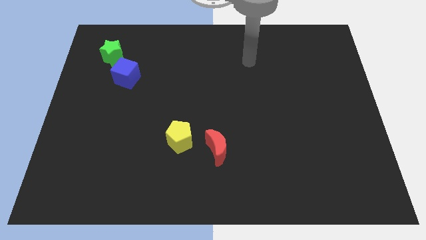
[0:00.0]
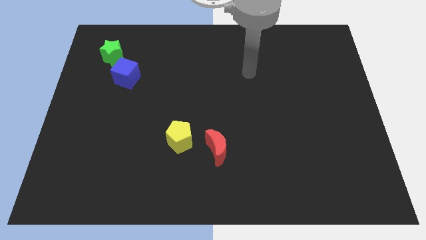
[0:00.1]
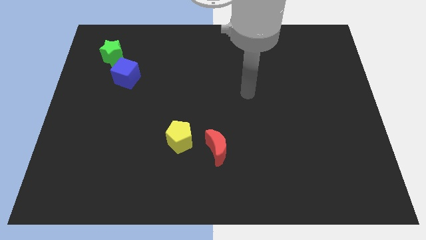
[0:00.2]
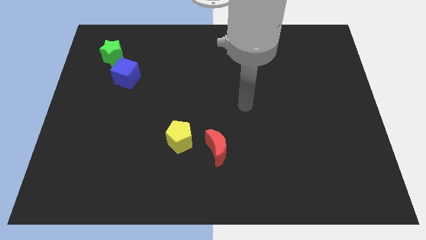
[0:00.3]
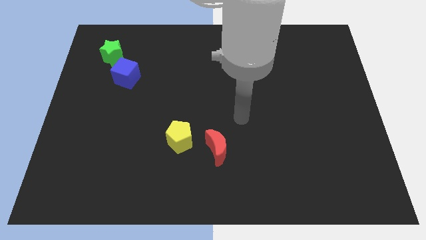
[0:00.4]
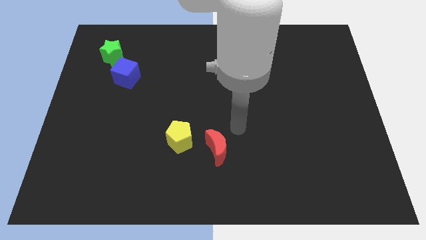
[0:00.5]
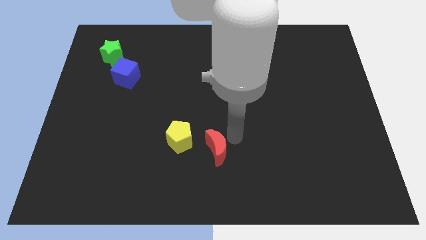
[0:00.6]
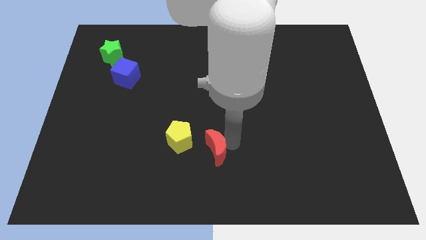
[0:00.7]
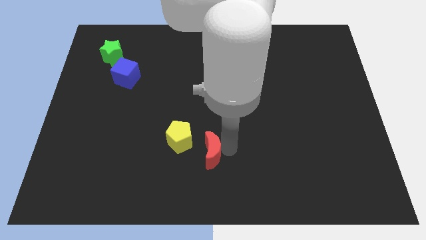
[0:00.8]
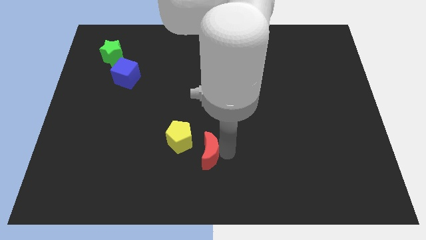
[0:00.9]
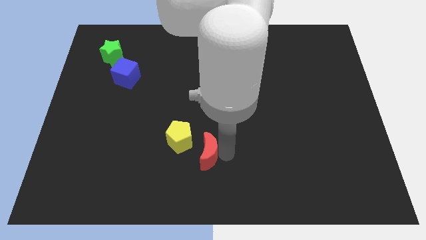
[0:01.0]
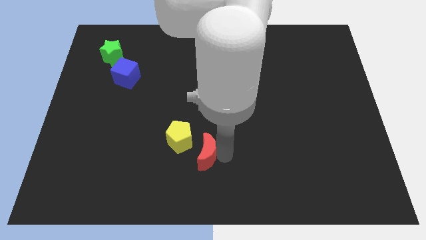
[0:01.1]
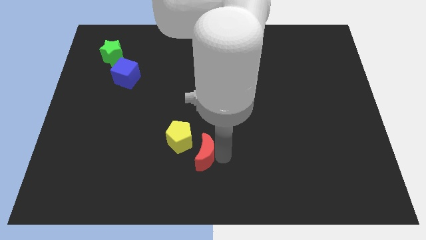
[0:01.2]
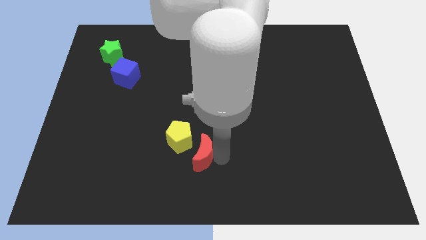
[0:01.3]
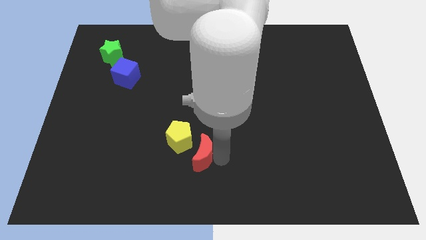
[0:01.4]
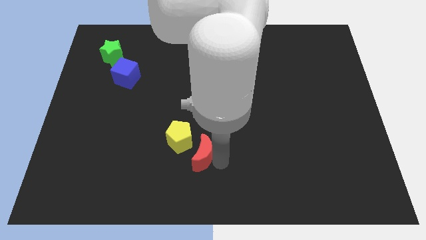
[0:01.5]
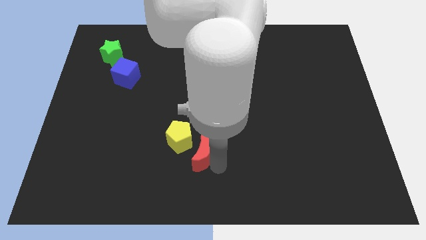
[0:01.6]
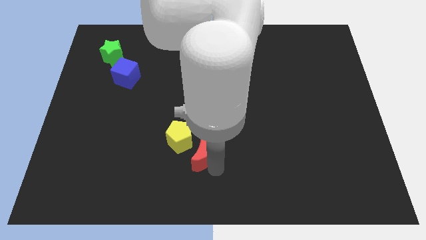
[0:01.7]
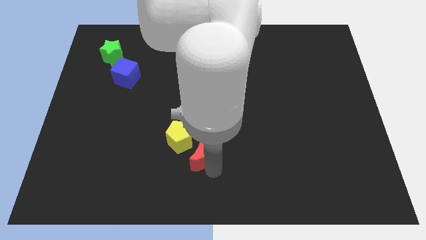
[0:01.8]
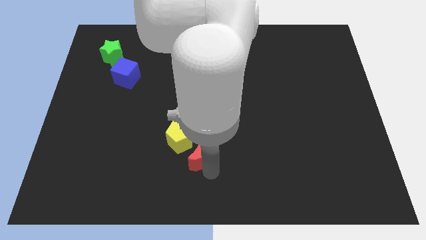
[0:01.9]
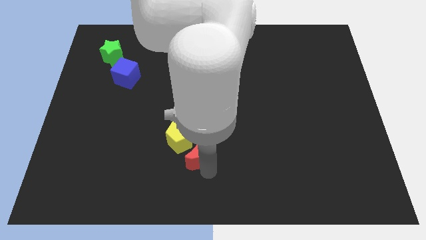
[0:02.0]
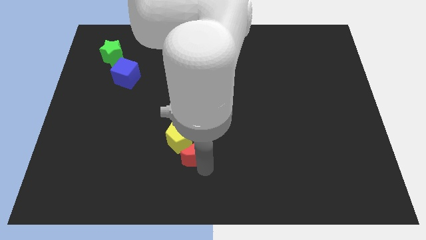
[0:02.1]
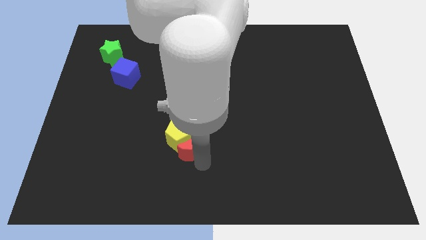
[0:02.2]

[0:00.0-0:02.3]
move the moon close to the yellow pentagon

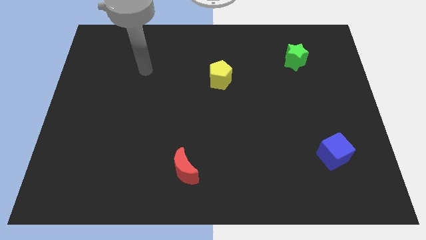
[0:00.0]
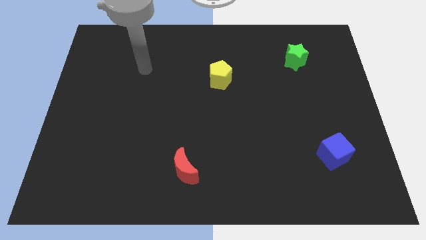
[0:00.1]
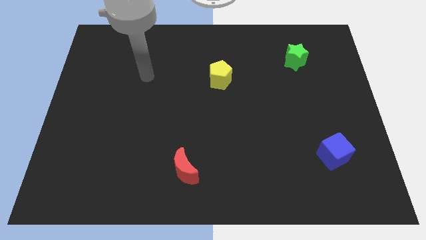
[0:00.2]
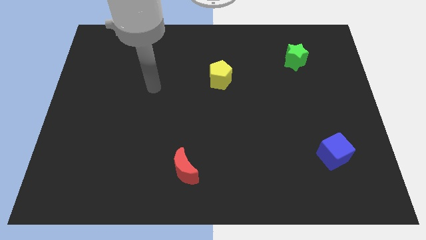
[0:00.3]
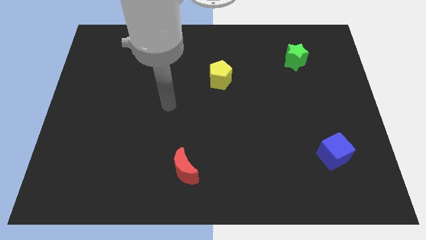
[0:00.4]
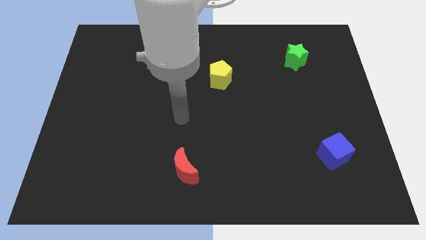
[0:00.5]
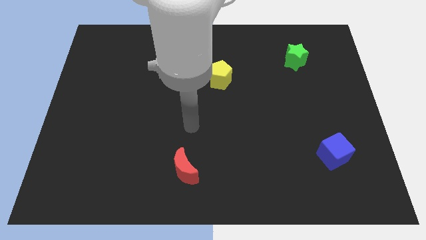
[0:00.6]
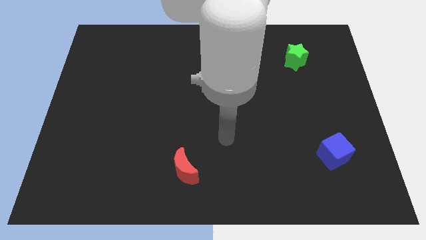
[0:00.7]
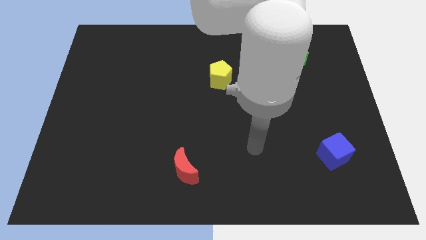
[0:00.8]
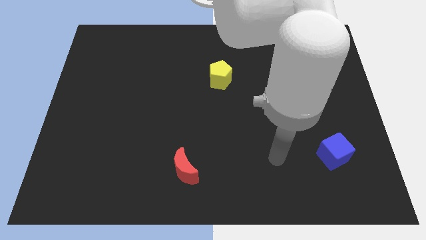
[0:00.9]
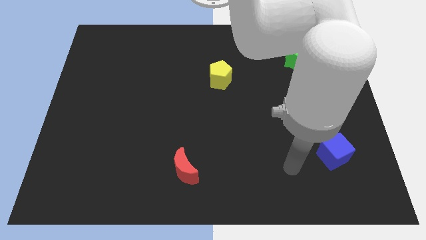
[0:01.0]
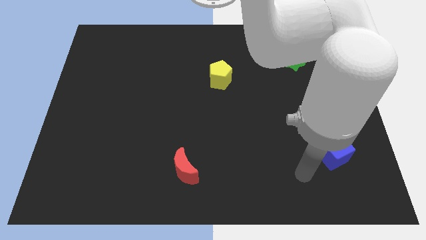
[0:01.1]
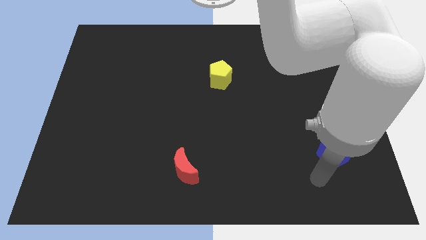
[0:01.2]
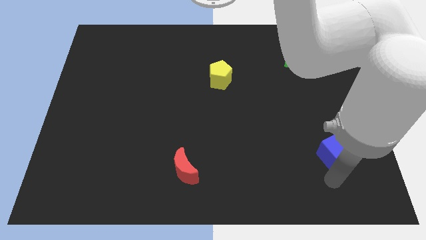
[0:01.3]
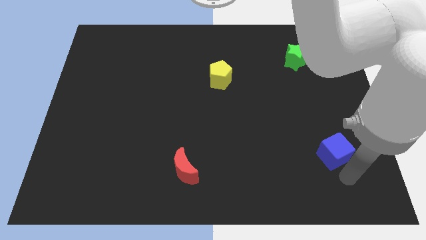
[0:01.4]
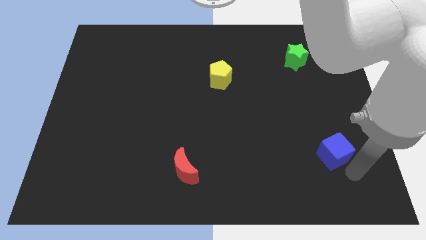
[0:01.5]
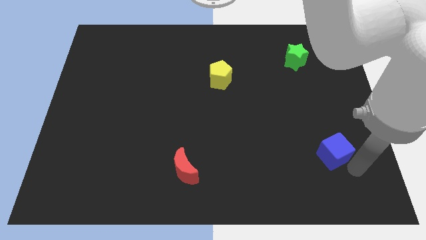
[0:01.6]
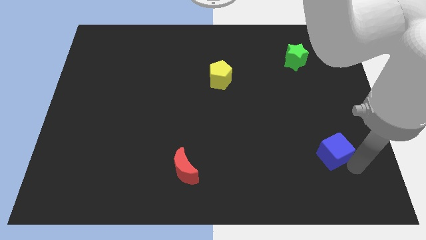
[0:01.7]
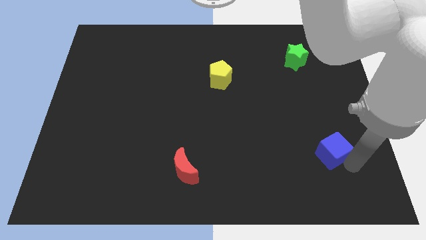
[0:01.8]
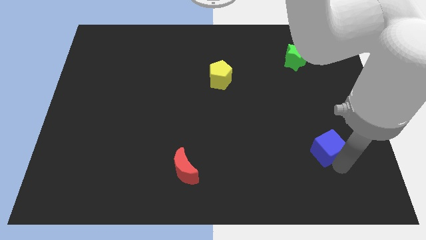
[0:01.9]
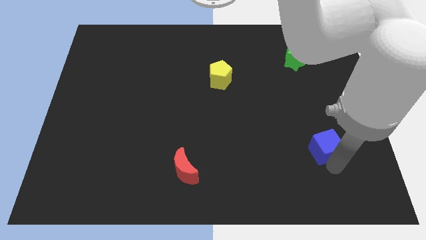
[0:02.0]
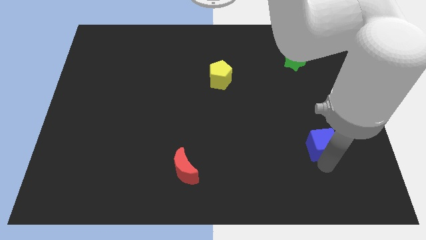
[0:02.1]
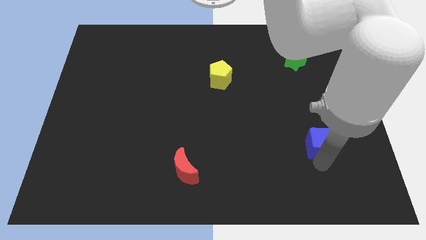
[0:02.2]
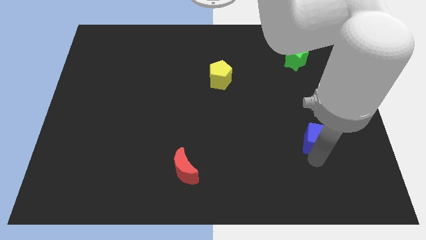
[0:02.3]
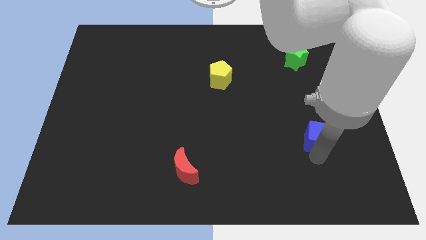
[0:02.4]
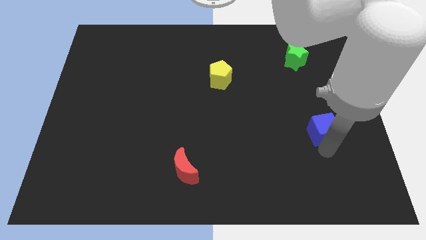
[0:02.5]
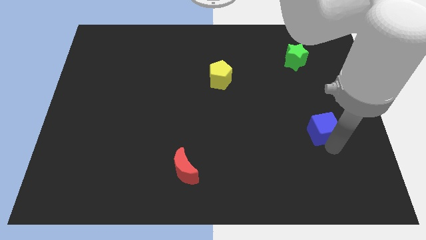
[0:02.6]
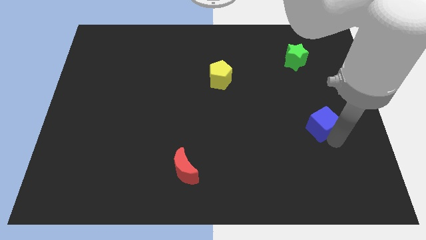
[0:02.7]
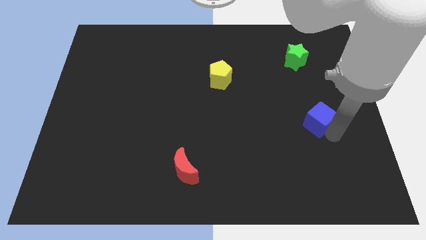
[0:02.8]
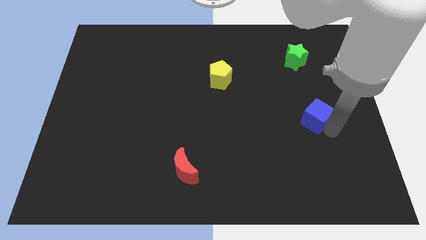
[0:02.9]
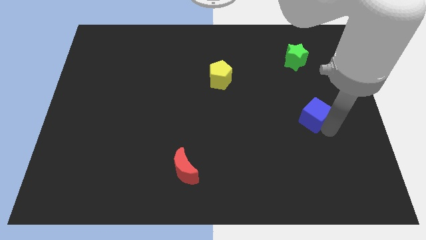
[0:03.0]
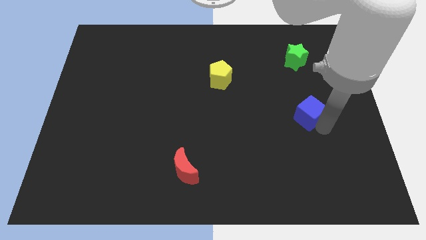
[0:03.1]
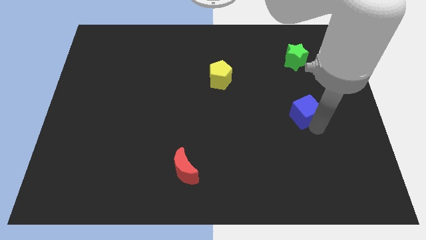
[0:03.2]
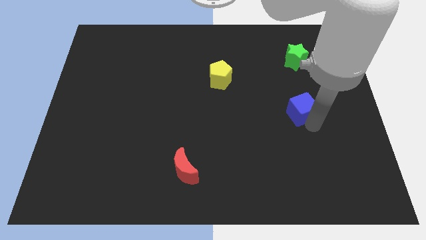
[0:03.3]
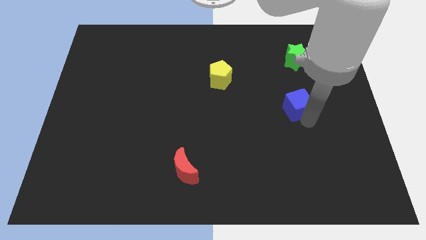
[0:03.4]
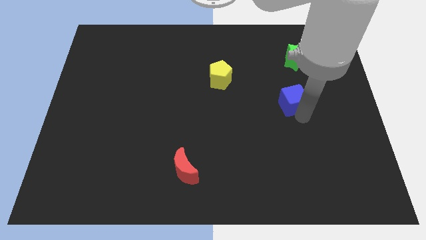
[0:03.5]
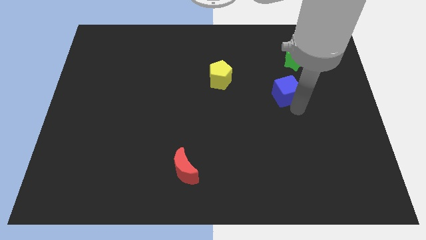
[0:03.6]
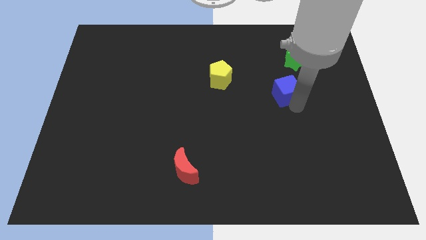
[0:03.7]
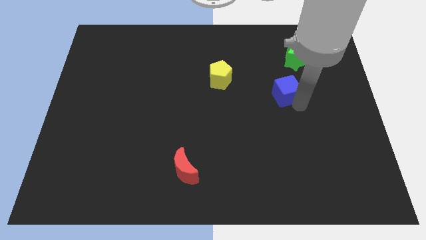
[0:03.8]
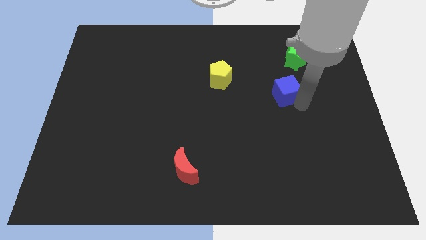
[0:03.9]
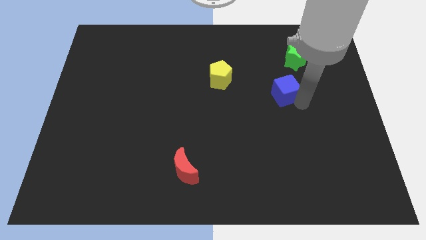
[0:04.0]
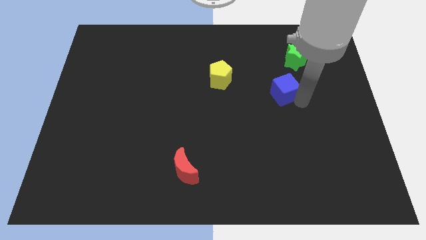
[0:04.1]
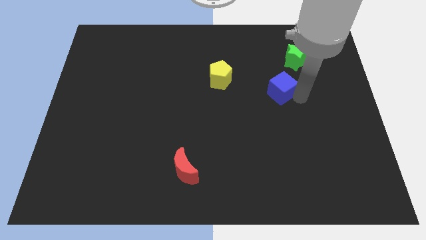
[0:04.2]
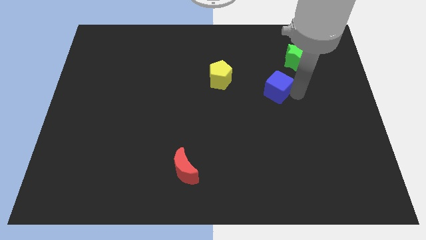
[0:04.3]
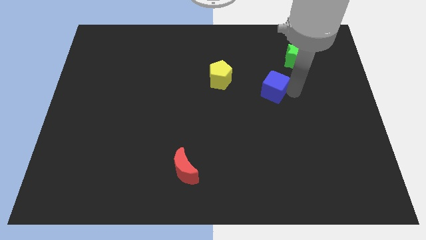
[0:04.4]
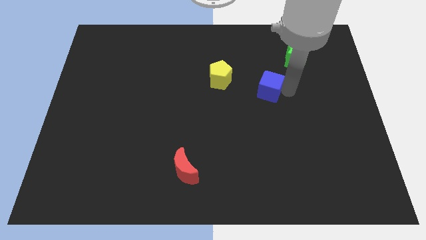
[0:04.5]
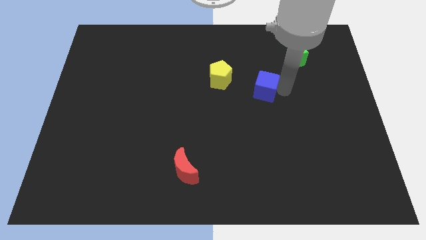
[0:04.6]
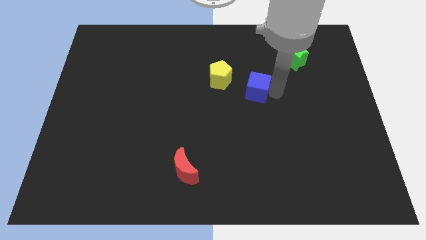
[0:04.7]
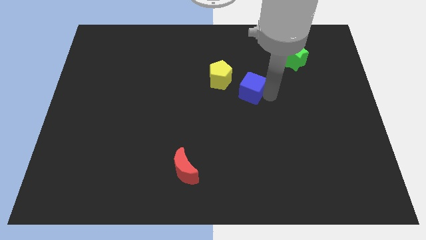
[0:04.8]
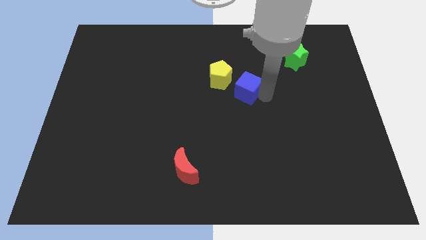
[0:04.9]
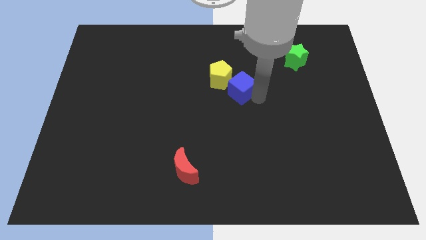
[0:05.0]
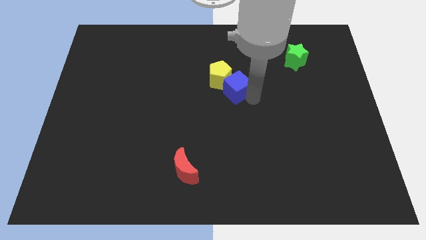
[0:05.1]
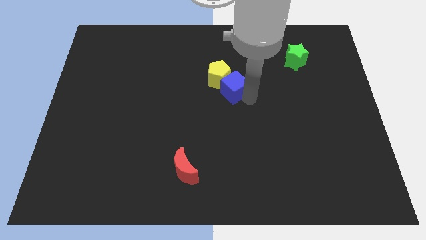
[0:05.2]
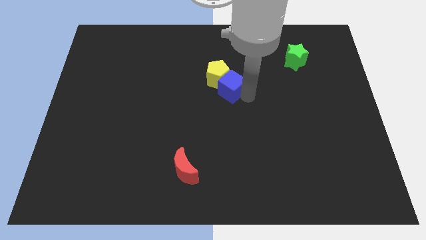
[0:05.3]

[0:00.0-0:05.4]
push the blue cube to the yellow block

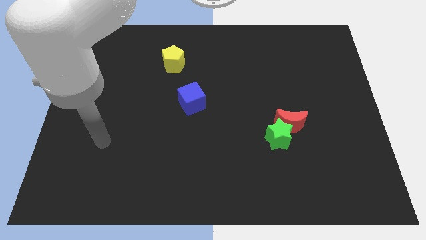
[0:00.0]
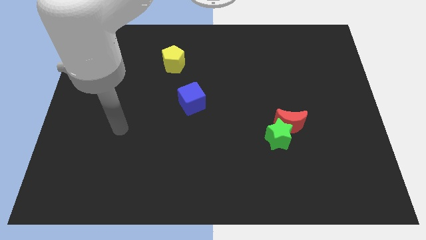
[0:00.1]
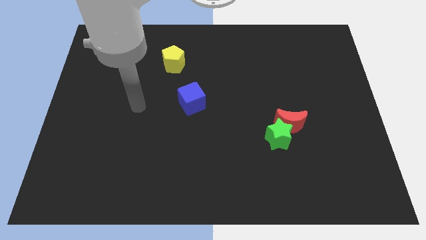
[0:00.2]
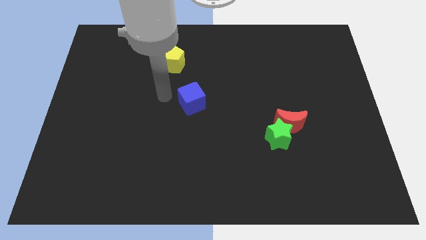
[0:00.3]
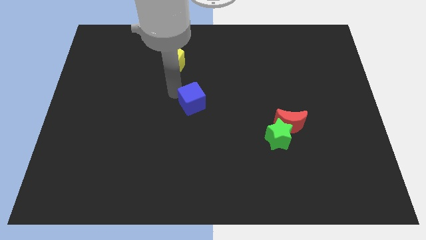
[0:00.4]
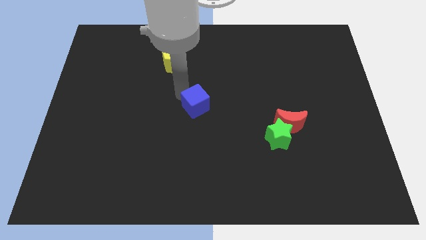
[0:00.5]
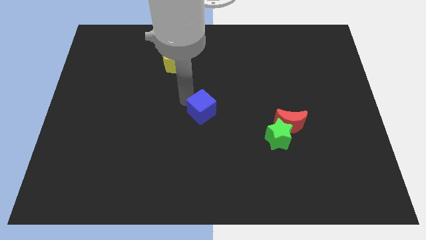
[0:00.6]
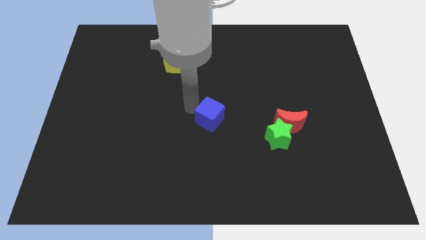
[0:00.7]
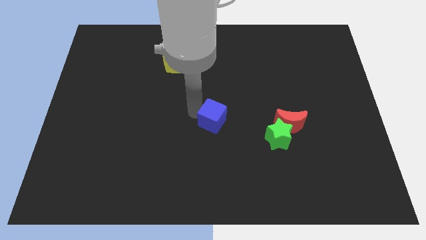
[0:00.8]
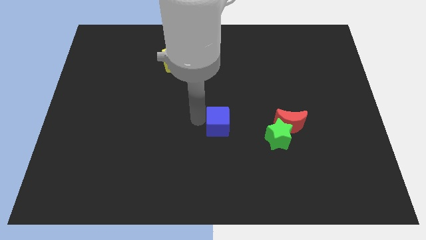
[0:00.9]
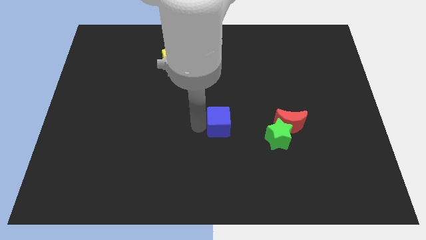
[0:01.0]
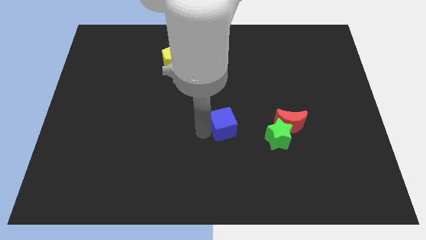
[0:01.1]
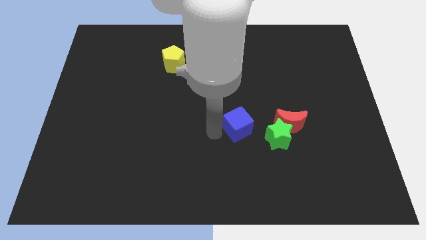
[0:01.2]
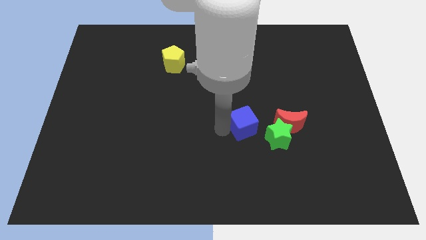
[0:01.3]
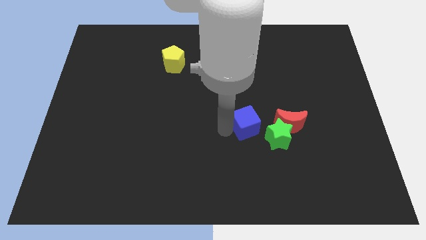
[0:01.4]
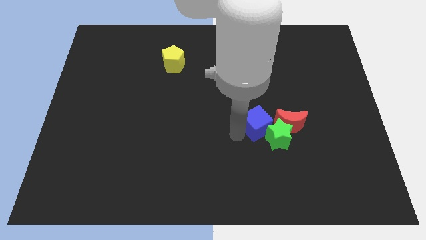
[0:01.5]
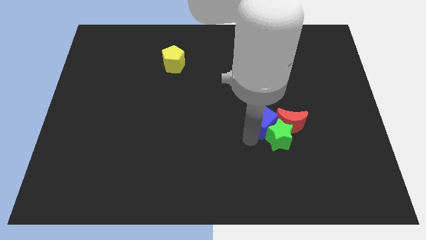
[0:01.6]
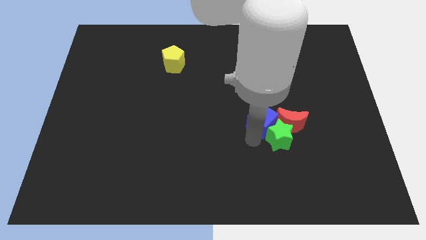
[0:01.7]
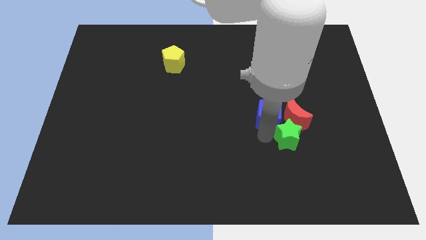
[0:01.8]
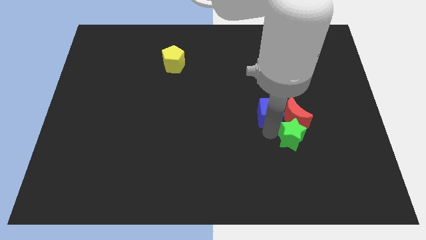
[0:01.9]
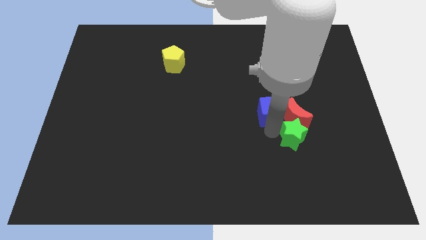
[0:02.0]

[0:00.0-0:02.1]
push the blue cube to the red block
